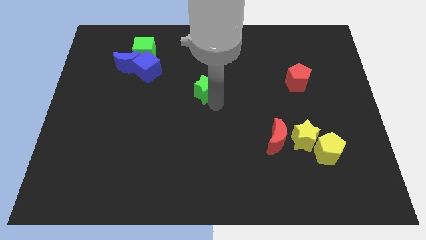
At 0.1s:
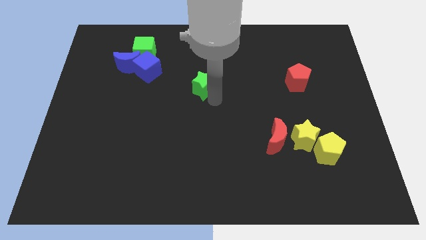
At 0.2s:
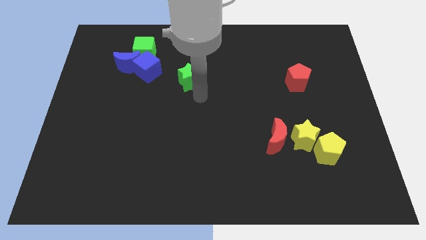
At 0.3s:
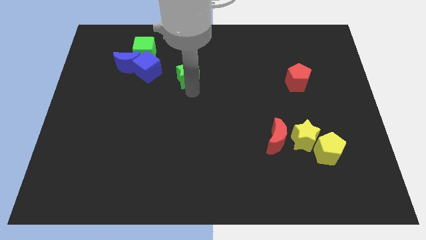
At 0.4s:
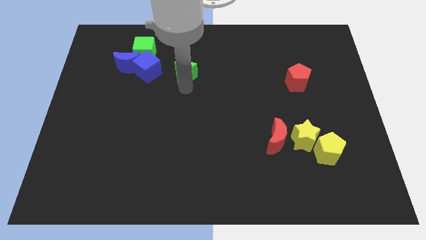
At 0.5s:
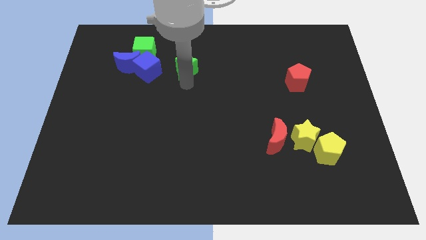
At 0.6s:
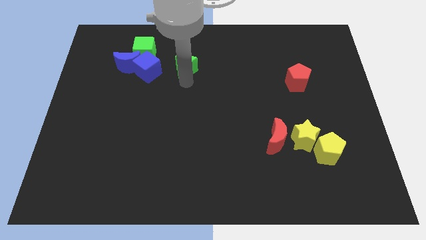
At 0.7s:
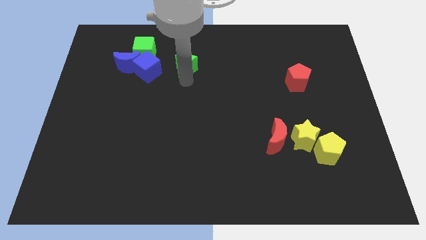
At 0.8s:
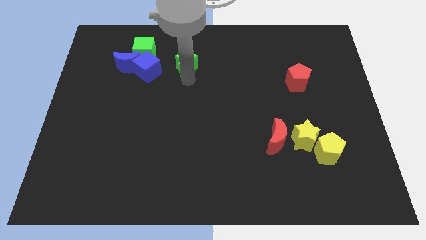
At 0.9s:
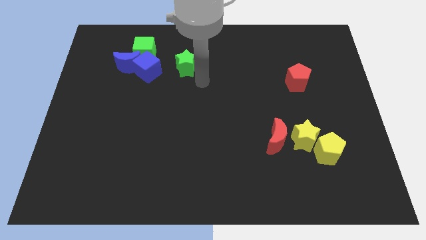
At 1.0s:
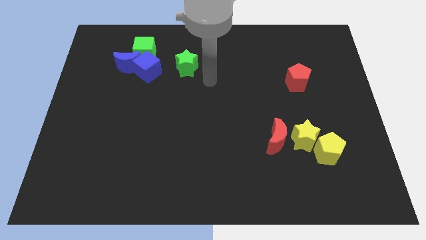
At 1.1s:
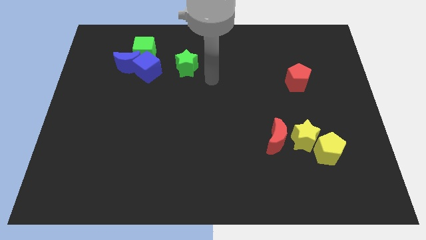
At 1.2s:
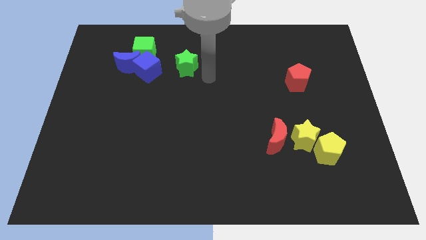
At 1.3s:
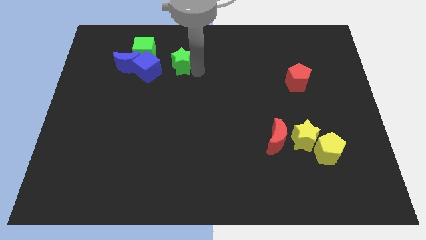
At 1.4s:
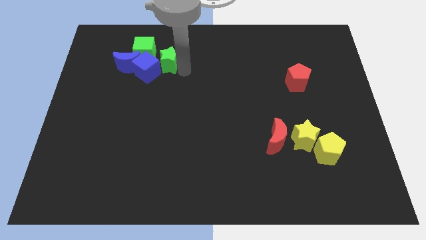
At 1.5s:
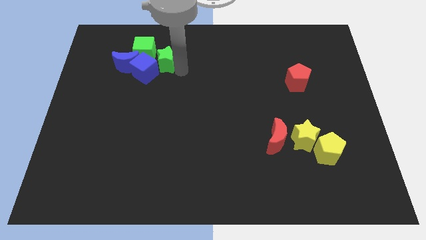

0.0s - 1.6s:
move green star into group of blocks

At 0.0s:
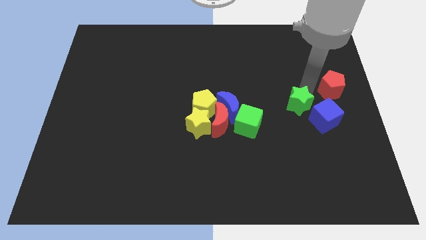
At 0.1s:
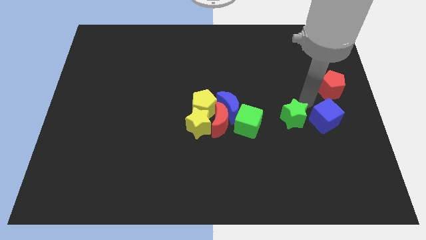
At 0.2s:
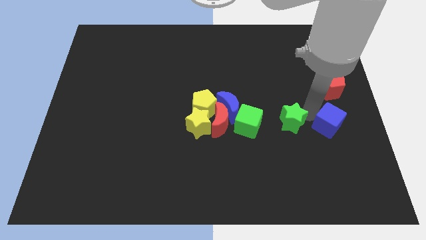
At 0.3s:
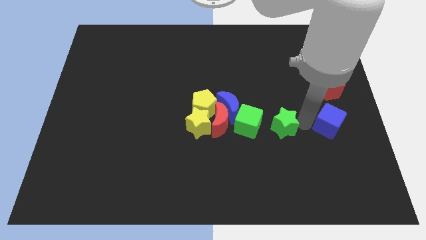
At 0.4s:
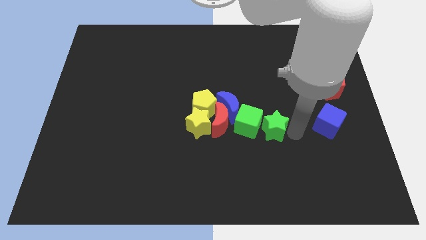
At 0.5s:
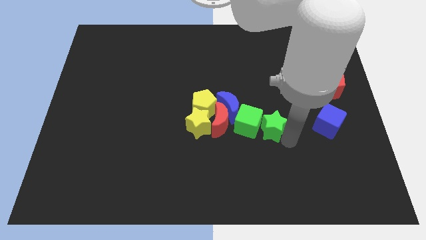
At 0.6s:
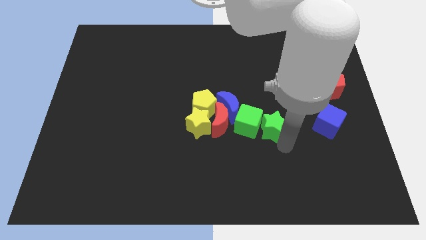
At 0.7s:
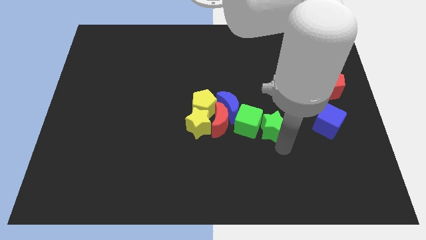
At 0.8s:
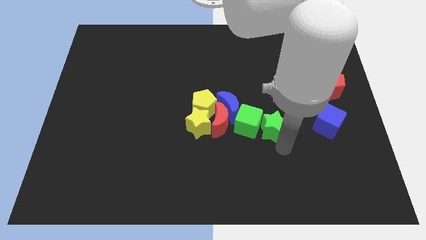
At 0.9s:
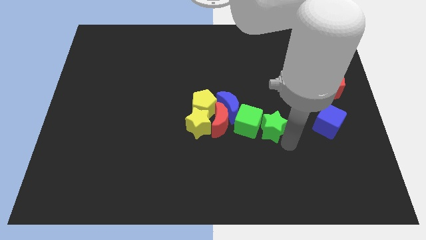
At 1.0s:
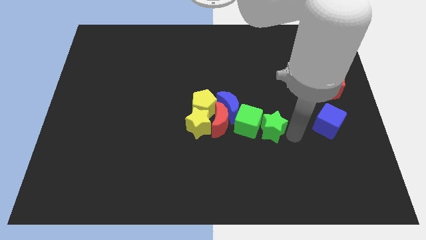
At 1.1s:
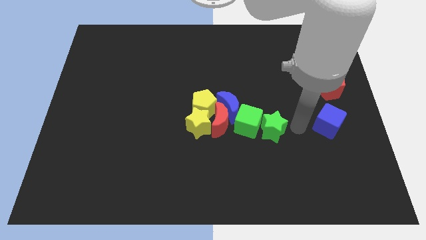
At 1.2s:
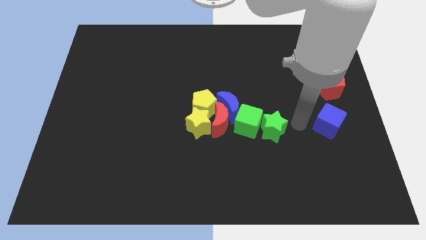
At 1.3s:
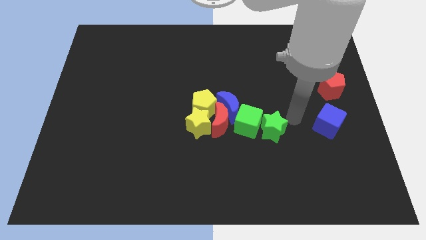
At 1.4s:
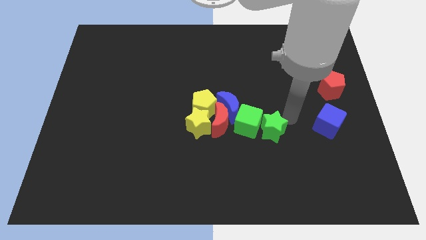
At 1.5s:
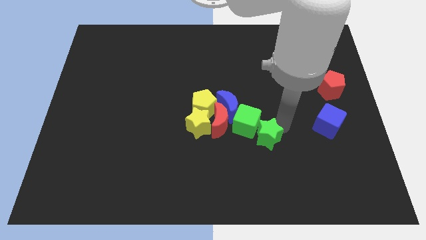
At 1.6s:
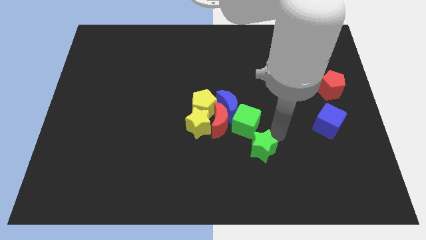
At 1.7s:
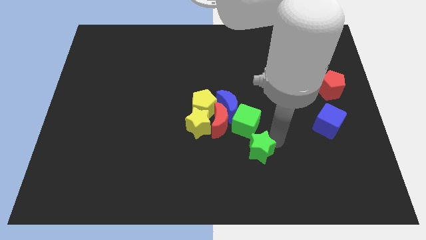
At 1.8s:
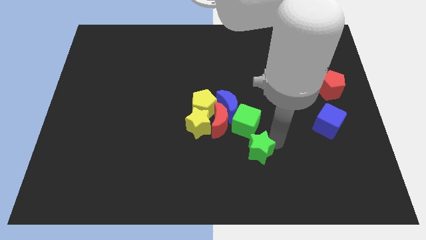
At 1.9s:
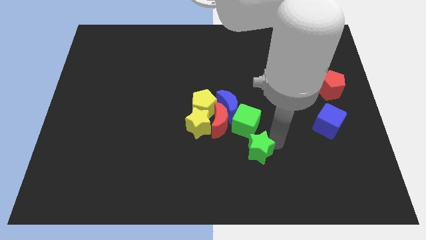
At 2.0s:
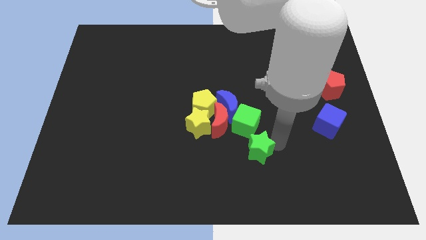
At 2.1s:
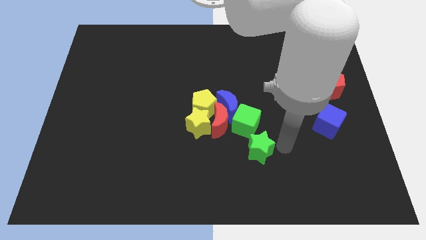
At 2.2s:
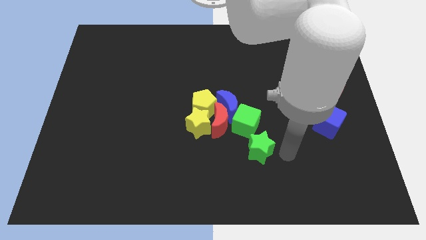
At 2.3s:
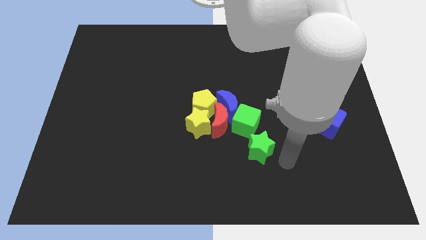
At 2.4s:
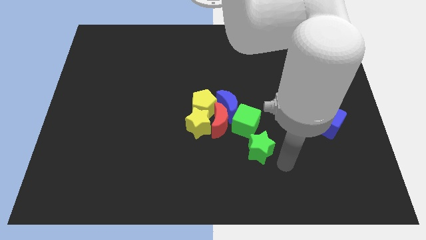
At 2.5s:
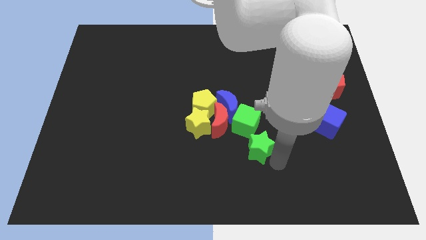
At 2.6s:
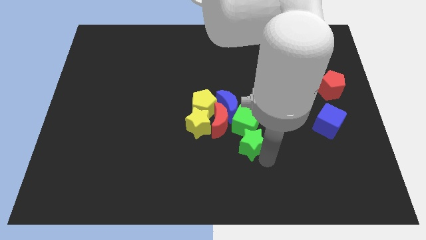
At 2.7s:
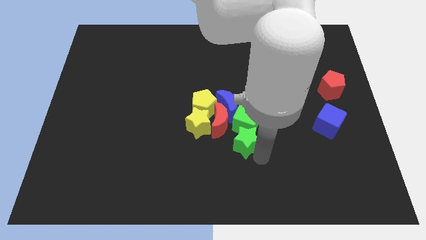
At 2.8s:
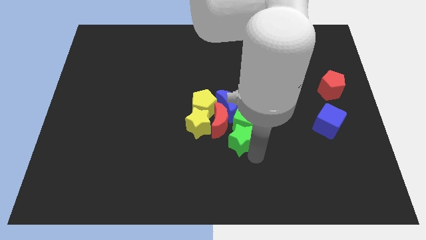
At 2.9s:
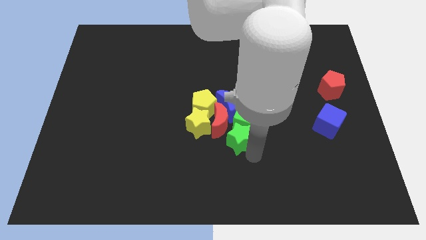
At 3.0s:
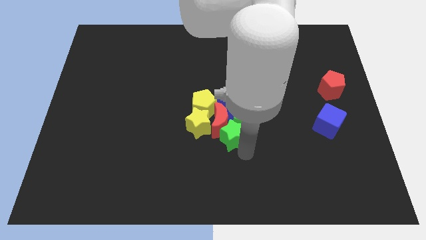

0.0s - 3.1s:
push the green star into the group of blocks

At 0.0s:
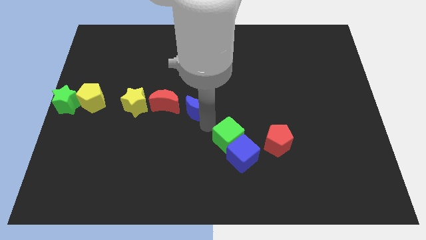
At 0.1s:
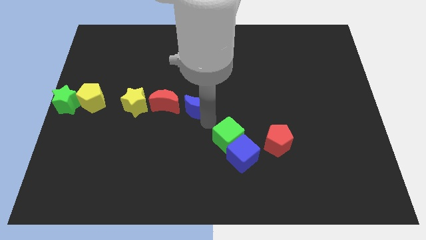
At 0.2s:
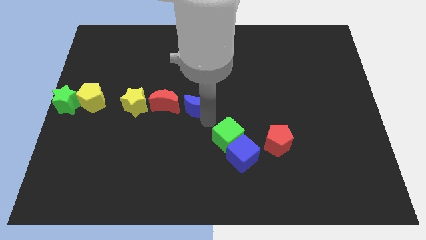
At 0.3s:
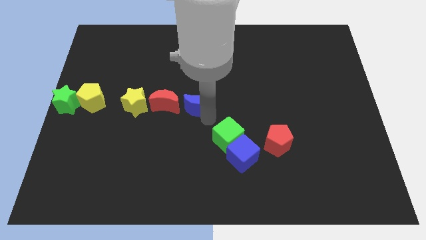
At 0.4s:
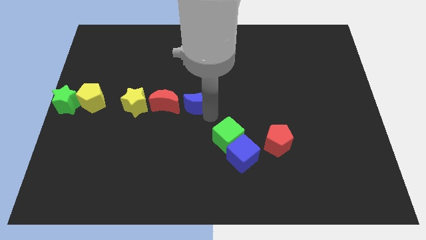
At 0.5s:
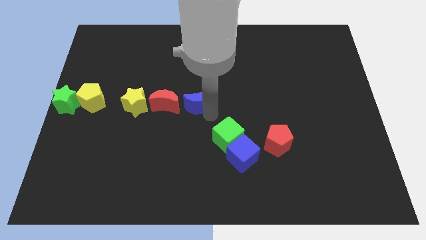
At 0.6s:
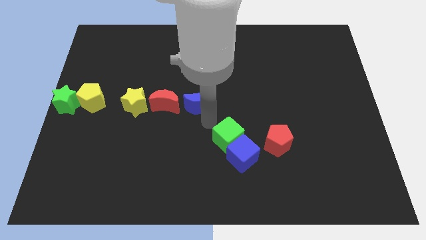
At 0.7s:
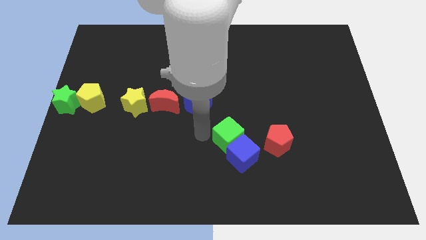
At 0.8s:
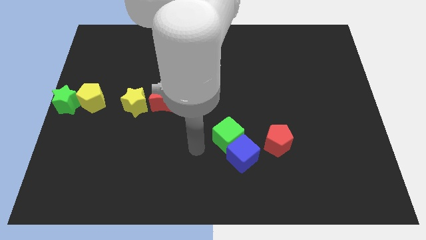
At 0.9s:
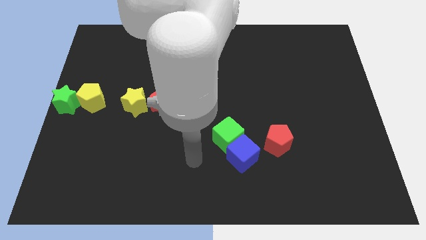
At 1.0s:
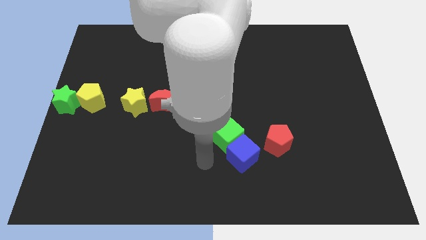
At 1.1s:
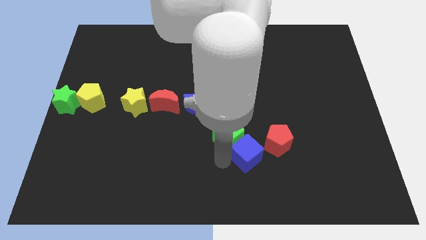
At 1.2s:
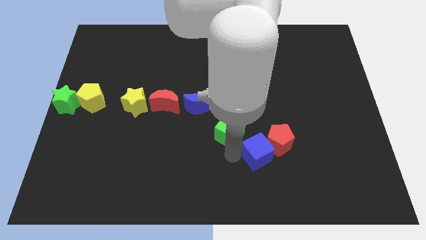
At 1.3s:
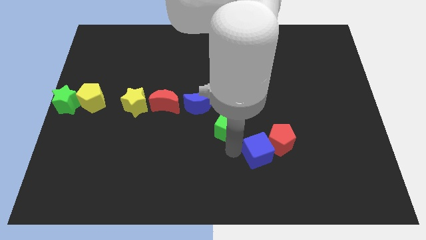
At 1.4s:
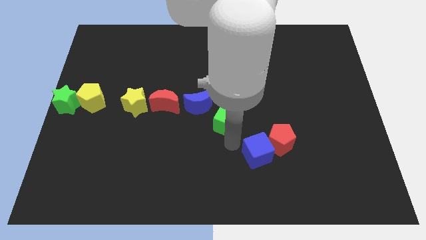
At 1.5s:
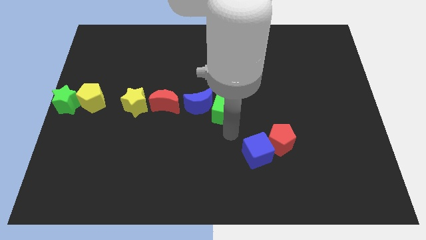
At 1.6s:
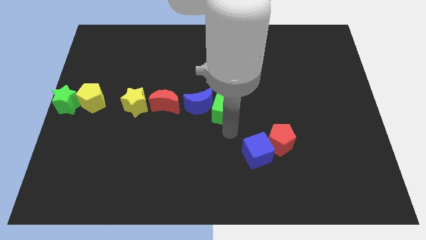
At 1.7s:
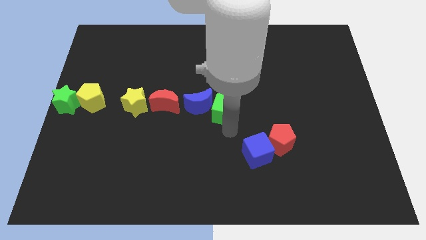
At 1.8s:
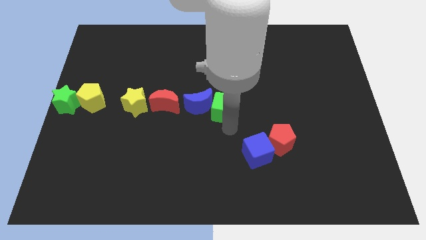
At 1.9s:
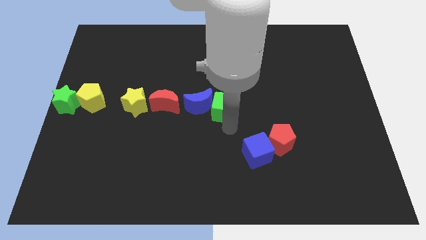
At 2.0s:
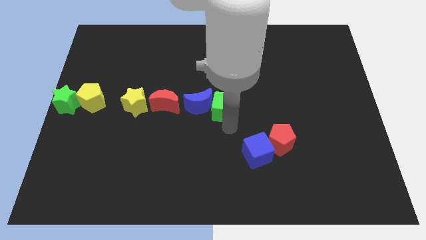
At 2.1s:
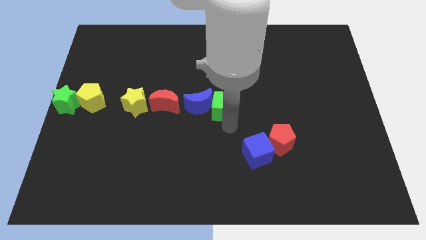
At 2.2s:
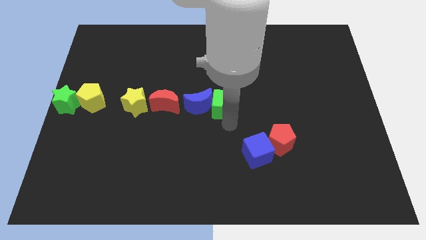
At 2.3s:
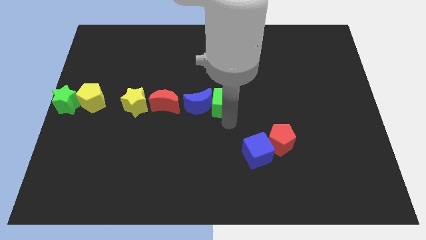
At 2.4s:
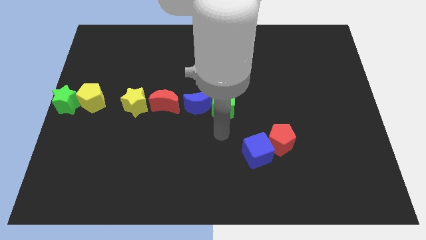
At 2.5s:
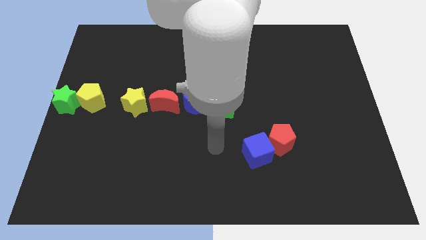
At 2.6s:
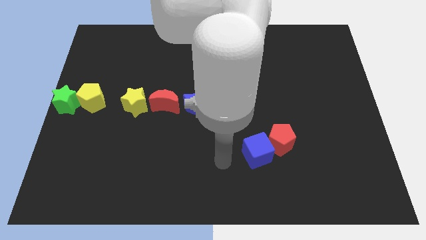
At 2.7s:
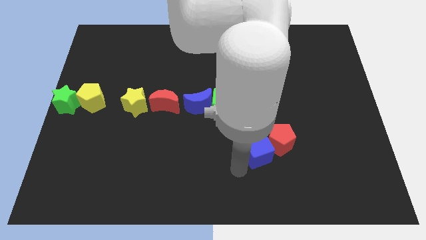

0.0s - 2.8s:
place the green cube into the right side of the blue moon

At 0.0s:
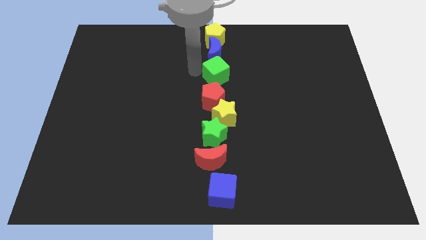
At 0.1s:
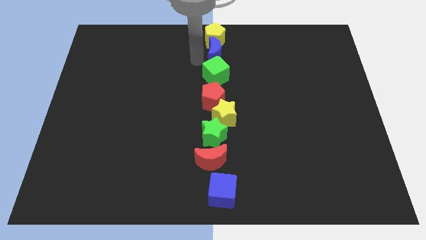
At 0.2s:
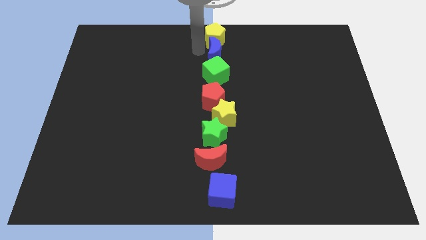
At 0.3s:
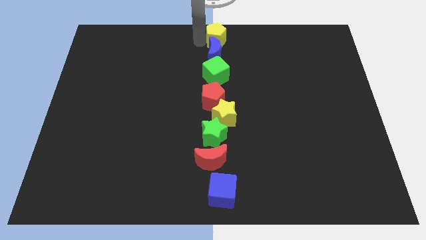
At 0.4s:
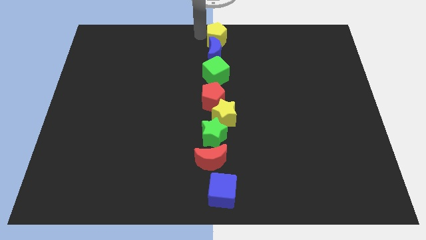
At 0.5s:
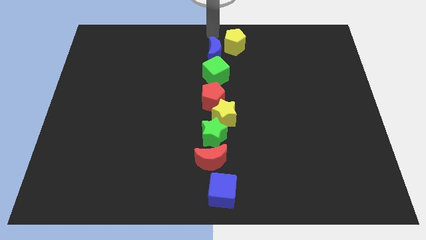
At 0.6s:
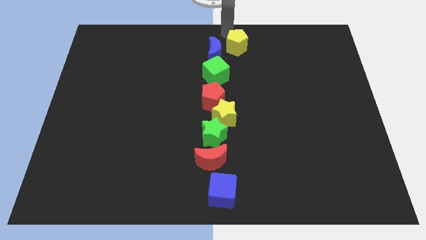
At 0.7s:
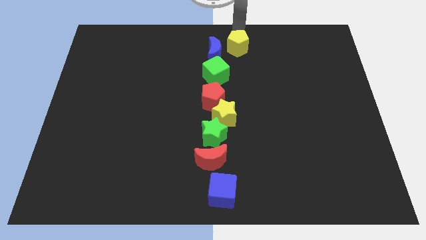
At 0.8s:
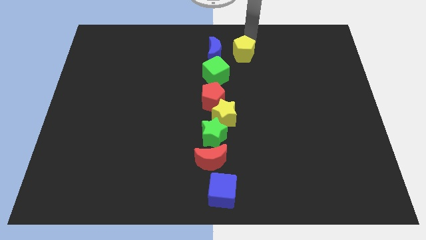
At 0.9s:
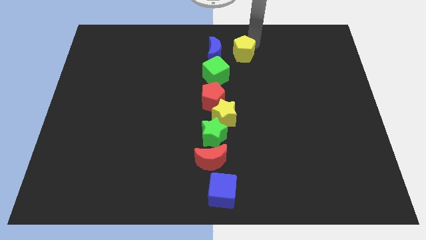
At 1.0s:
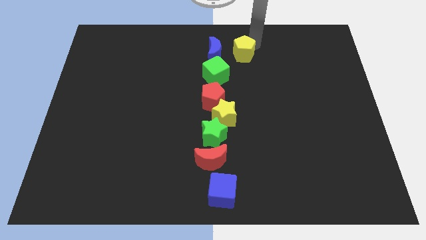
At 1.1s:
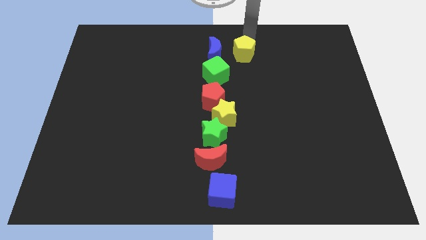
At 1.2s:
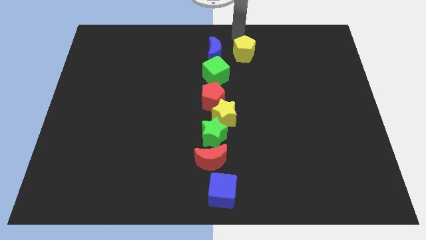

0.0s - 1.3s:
place the yellow pentagon right to the blue moon

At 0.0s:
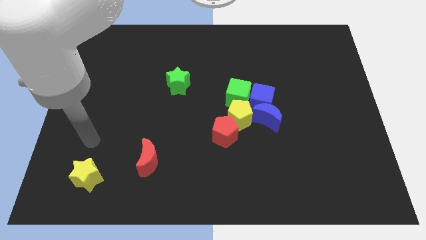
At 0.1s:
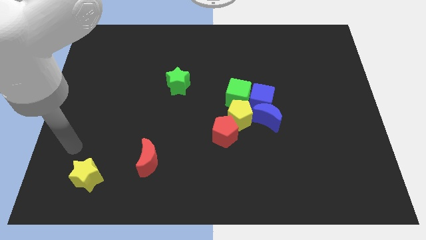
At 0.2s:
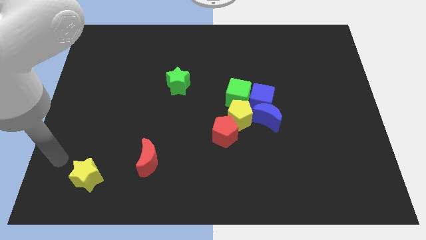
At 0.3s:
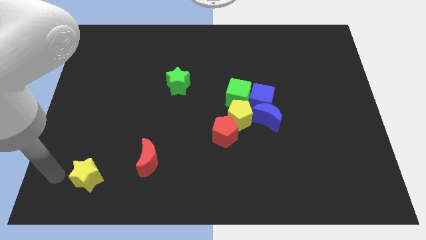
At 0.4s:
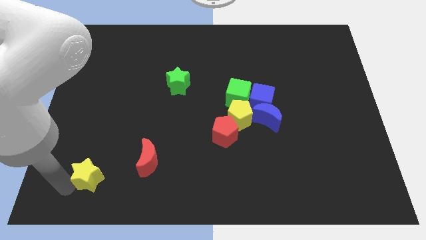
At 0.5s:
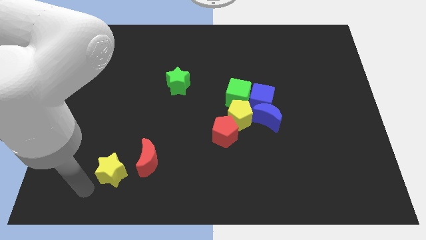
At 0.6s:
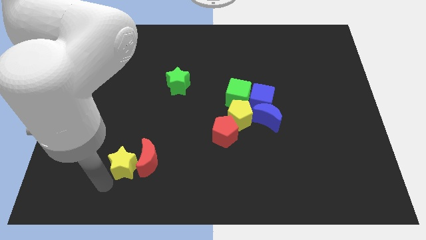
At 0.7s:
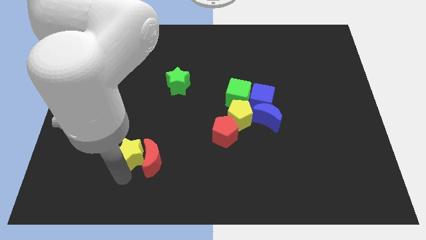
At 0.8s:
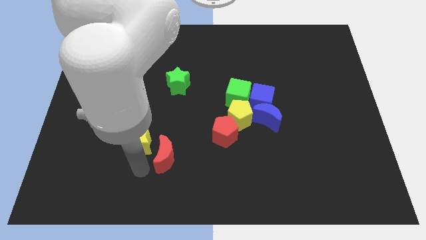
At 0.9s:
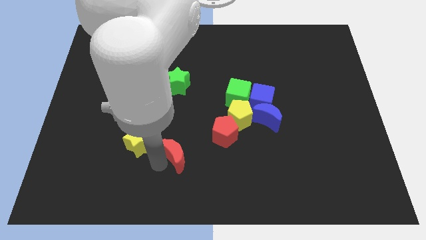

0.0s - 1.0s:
push the yellow star into the red moon
